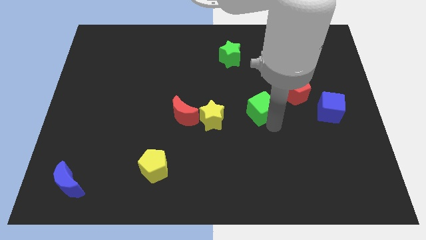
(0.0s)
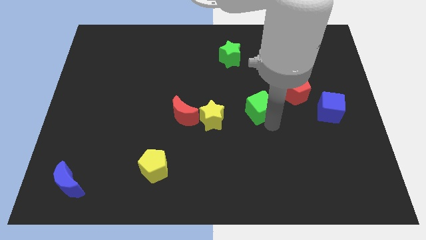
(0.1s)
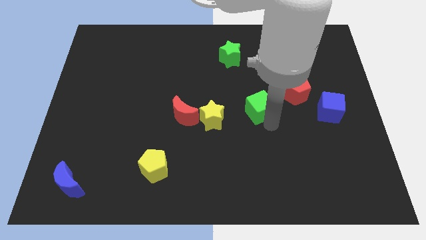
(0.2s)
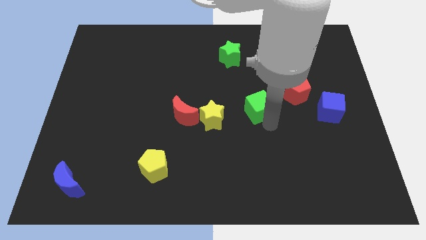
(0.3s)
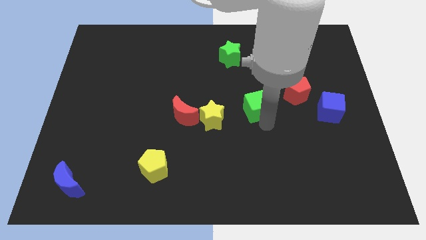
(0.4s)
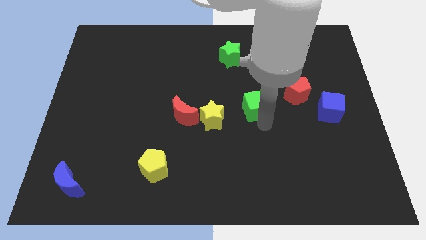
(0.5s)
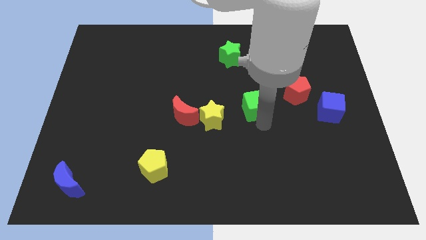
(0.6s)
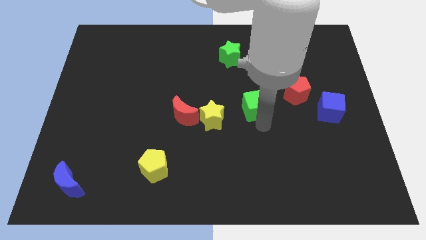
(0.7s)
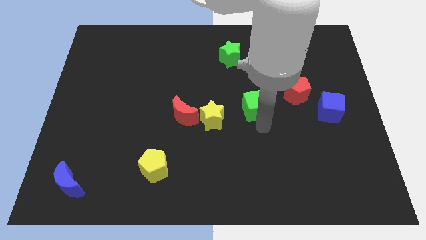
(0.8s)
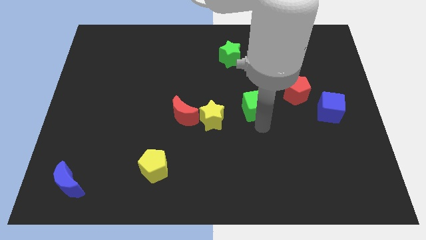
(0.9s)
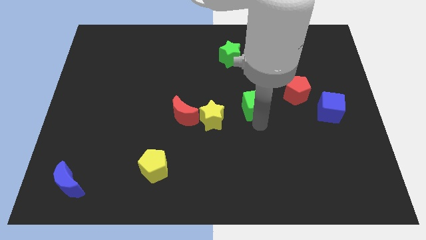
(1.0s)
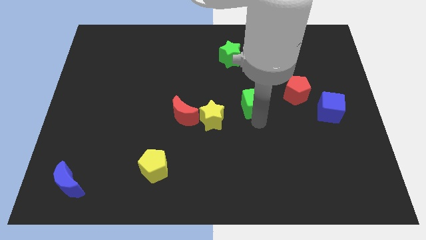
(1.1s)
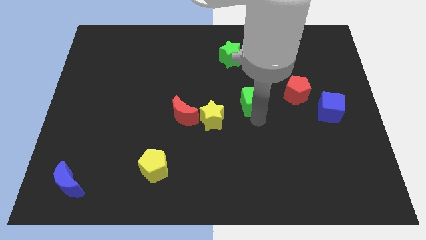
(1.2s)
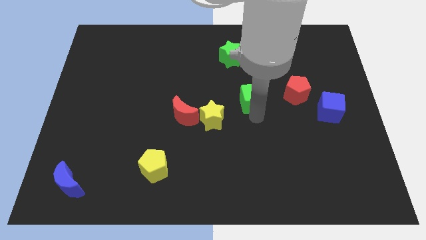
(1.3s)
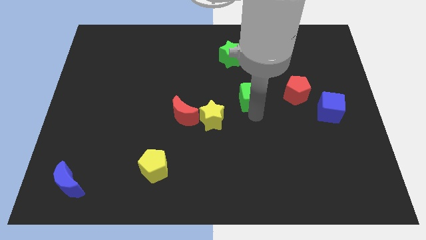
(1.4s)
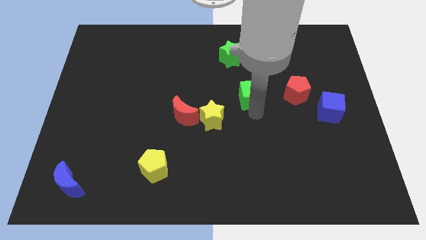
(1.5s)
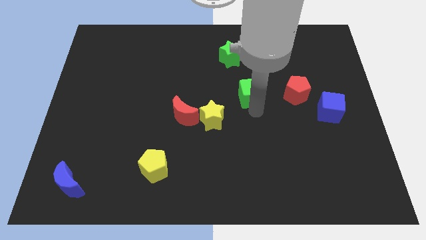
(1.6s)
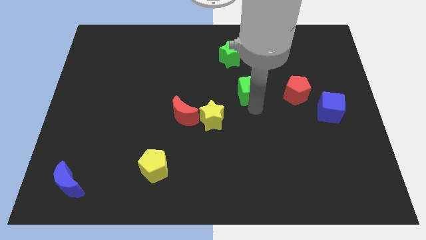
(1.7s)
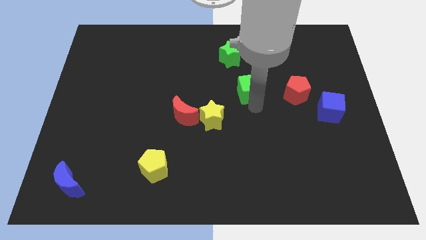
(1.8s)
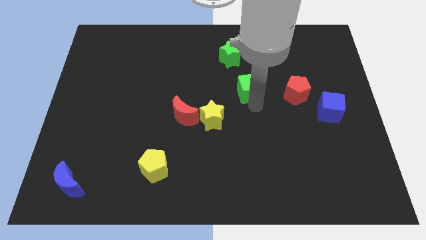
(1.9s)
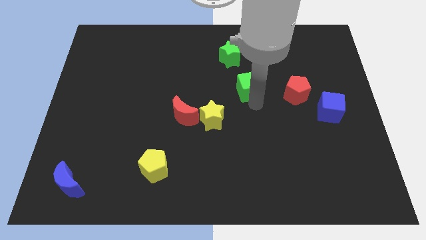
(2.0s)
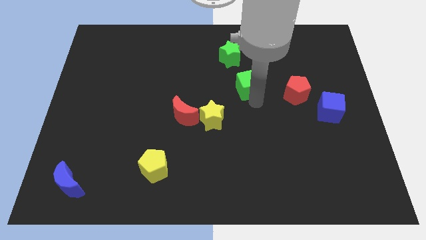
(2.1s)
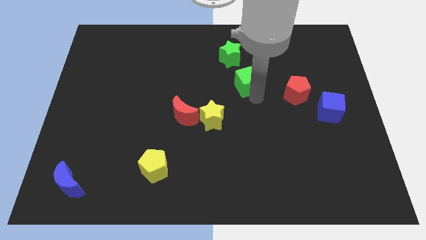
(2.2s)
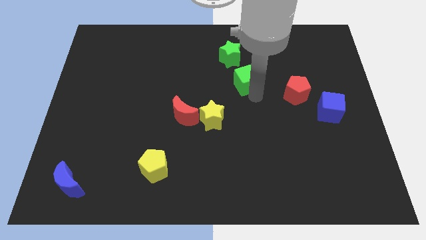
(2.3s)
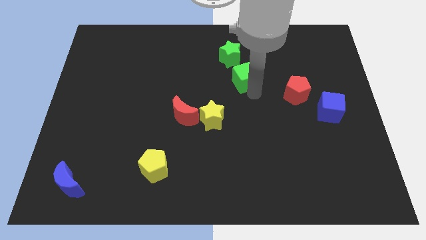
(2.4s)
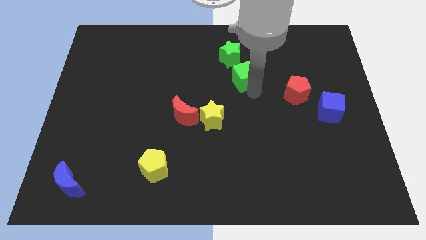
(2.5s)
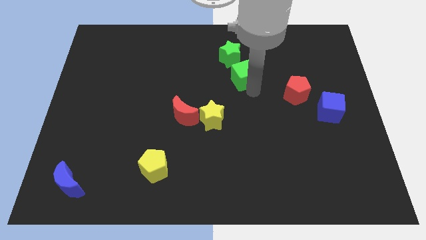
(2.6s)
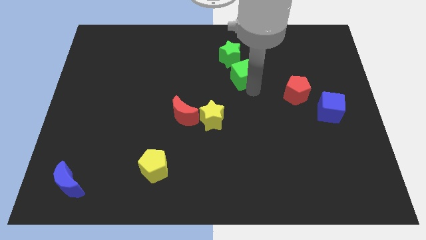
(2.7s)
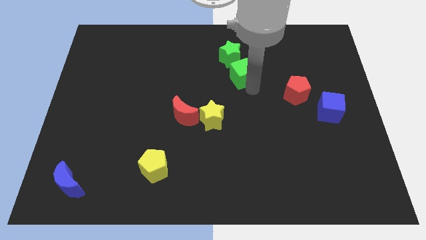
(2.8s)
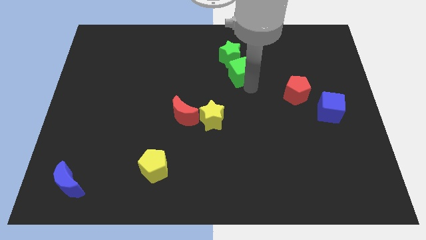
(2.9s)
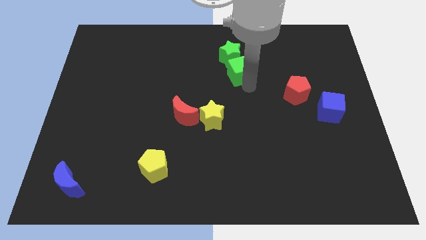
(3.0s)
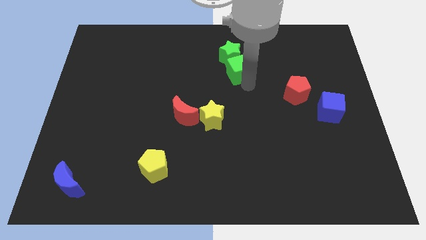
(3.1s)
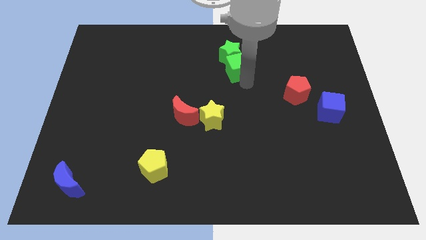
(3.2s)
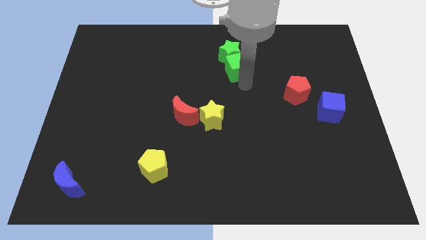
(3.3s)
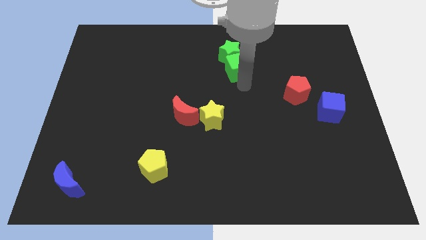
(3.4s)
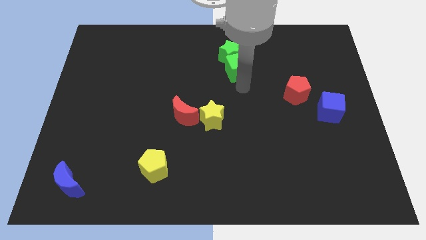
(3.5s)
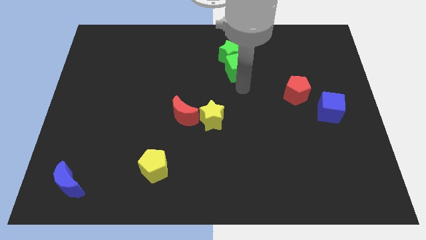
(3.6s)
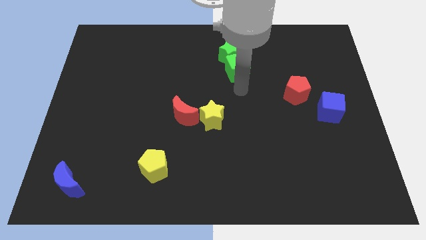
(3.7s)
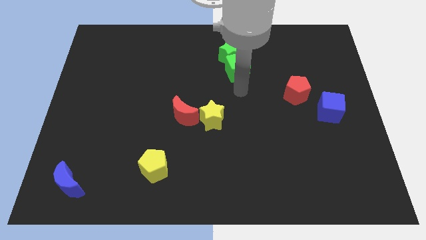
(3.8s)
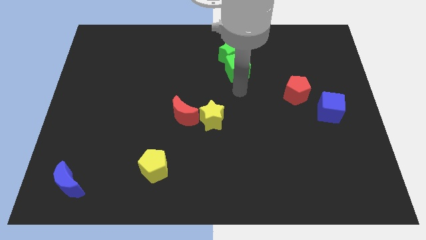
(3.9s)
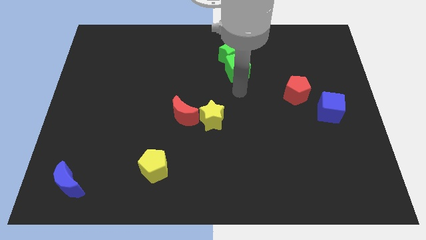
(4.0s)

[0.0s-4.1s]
group up the green blocks at the top center of the board

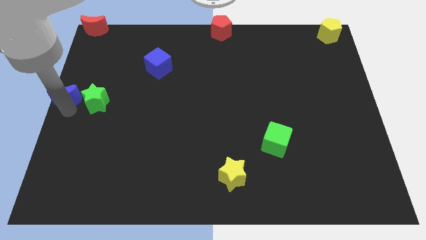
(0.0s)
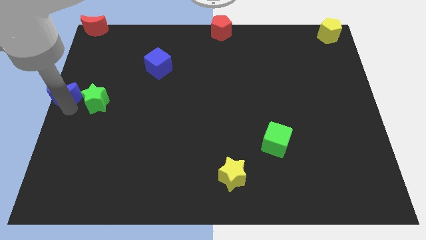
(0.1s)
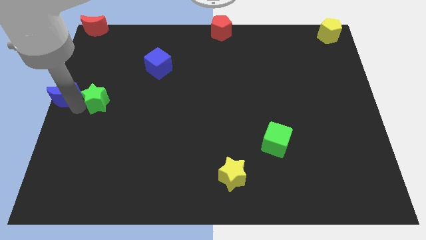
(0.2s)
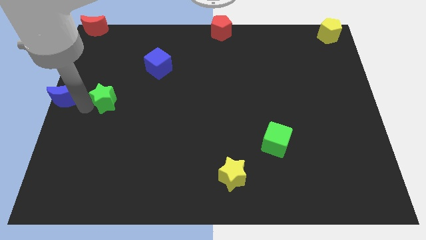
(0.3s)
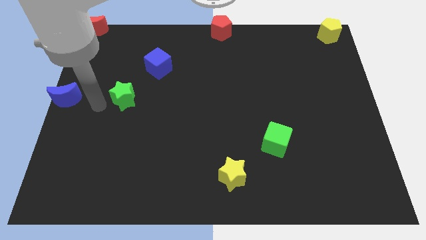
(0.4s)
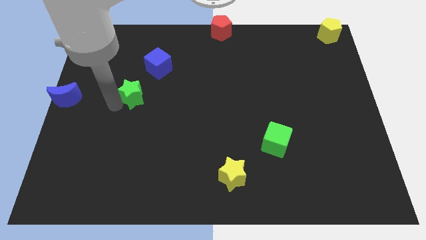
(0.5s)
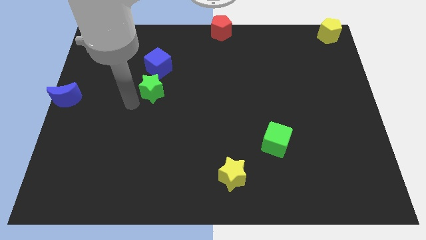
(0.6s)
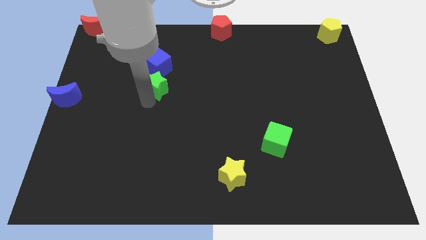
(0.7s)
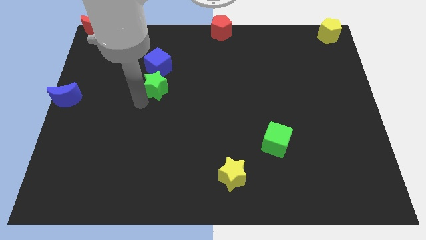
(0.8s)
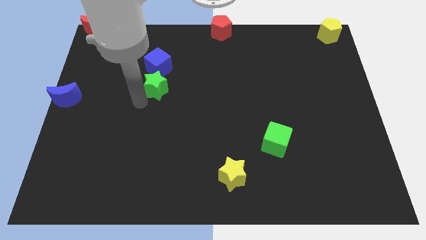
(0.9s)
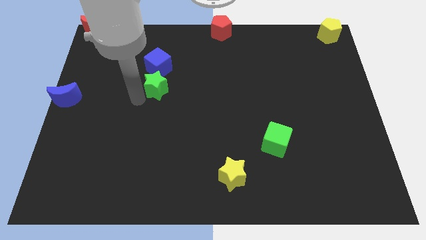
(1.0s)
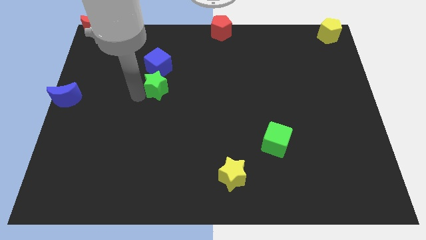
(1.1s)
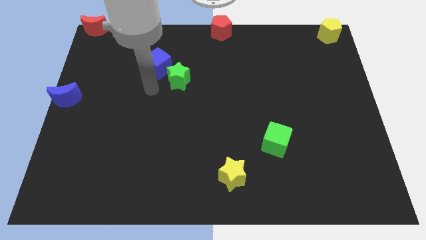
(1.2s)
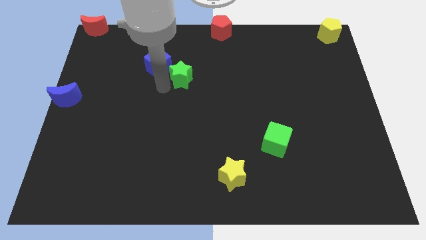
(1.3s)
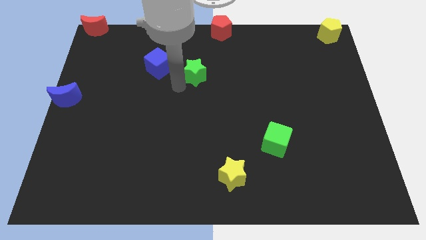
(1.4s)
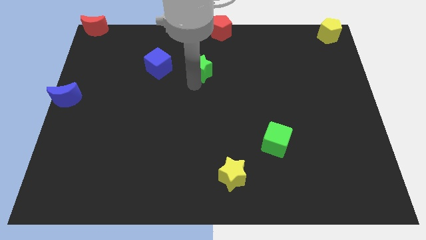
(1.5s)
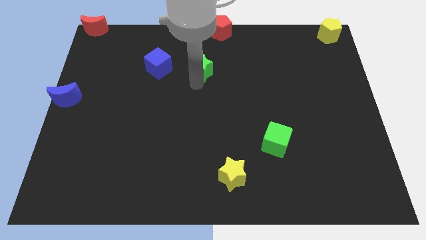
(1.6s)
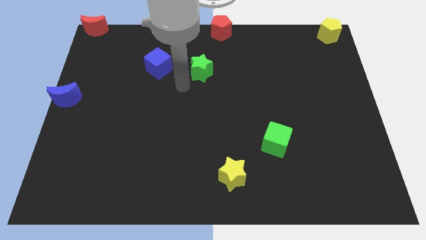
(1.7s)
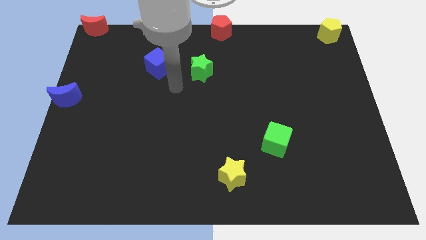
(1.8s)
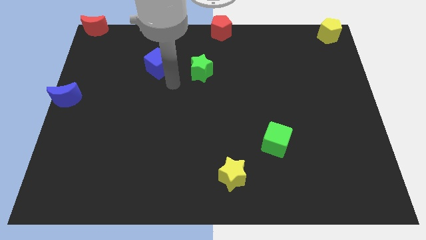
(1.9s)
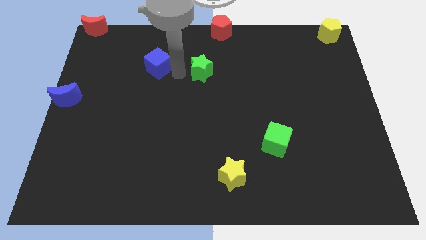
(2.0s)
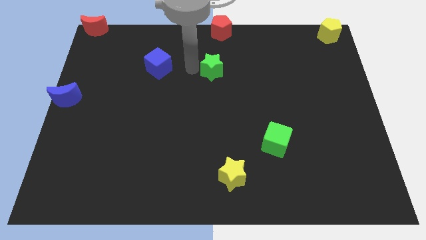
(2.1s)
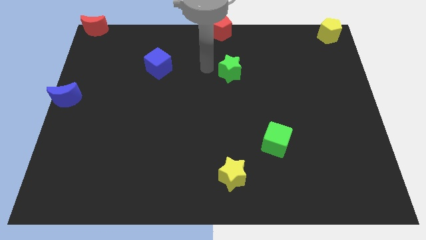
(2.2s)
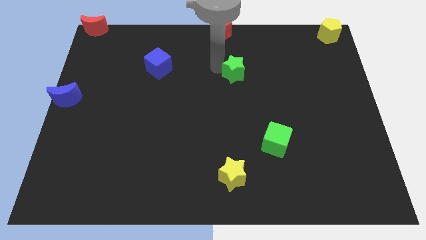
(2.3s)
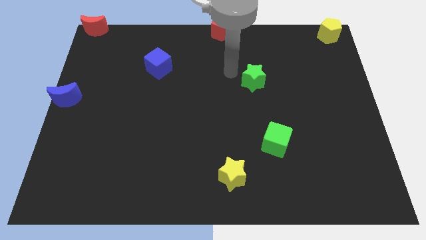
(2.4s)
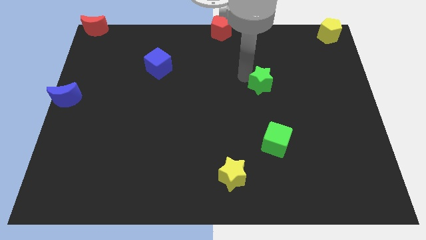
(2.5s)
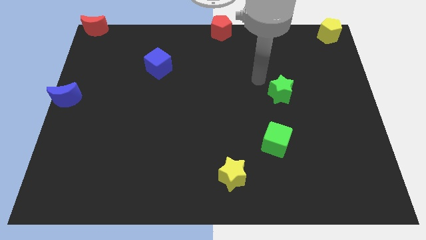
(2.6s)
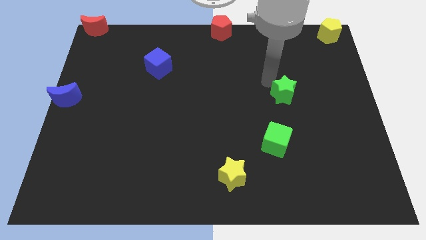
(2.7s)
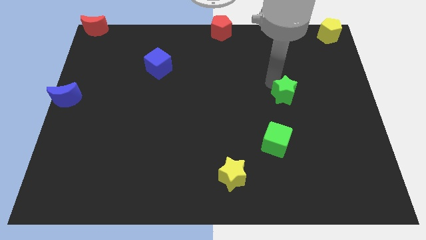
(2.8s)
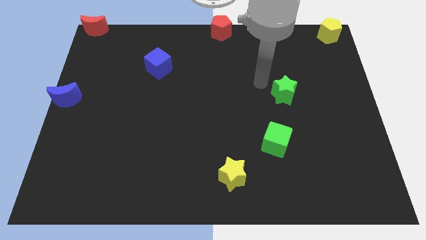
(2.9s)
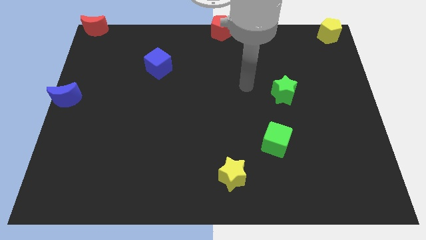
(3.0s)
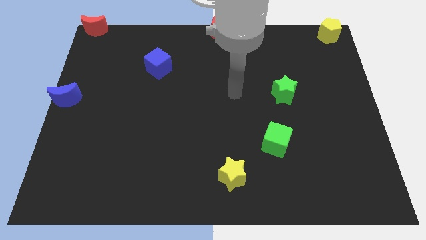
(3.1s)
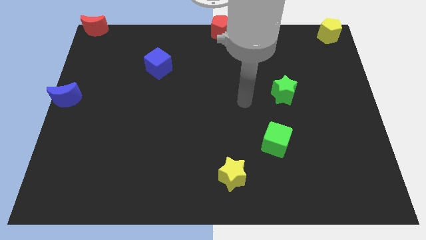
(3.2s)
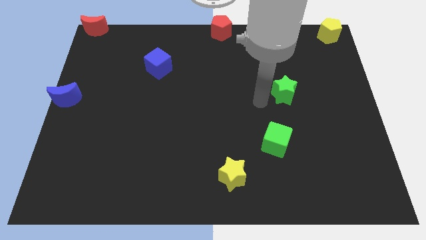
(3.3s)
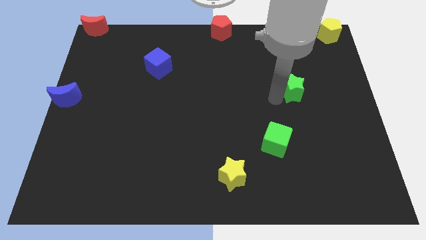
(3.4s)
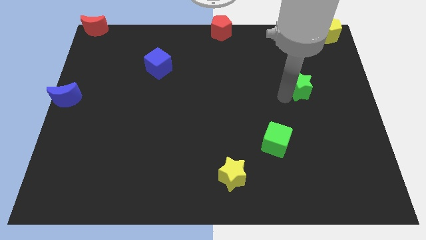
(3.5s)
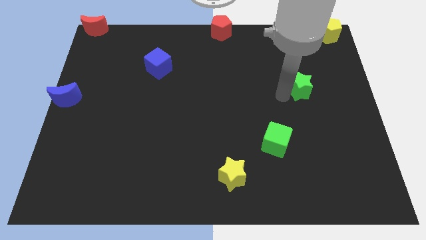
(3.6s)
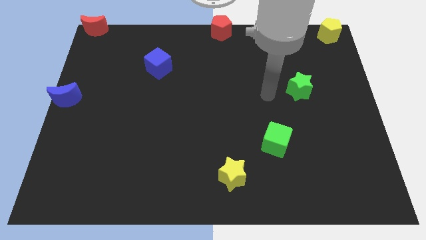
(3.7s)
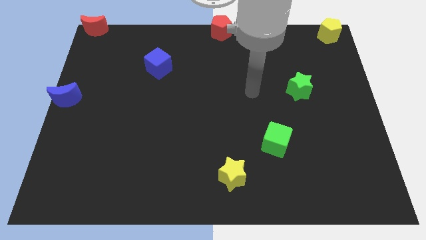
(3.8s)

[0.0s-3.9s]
move green star towards right diagonal to yellow pentagon

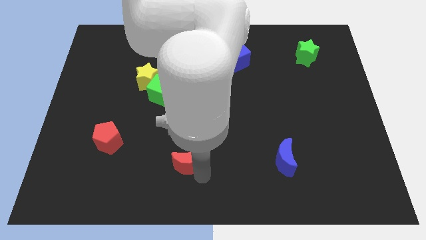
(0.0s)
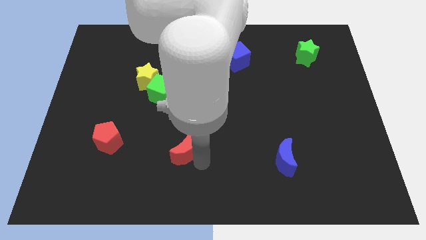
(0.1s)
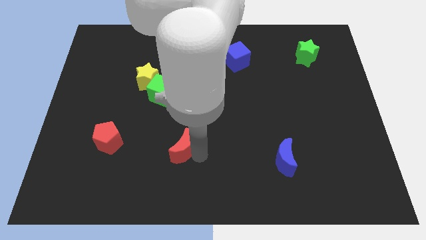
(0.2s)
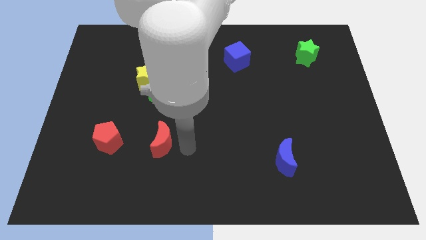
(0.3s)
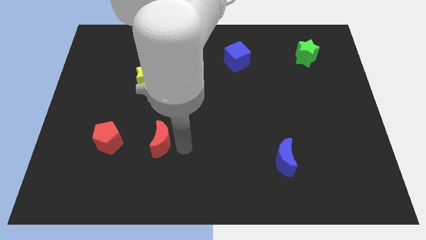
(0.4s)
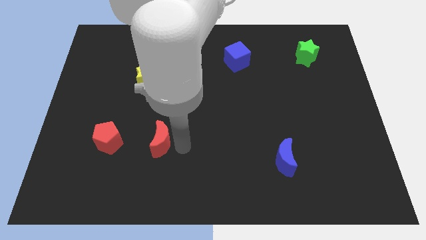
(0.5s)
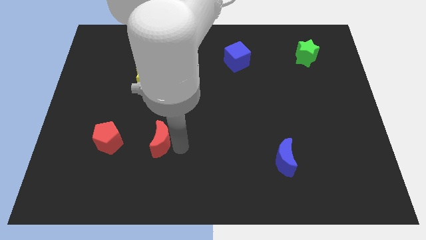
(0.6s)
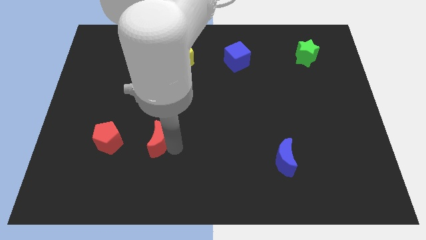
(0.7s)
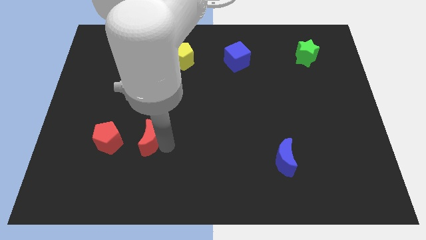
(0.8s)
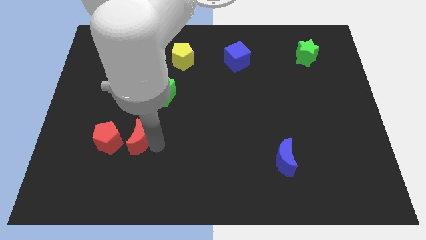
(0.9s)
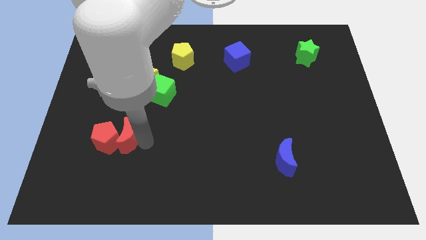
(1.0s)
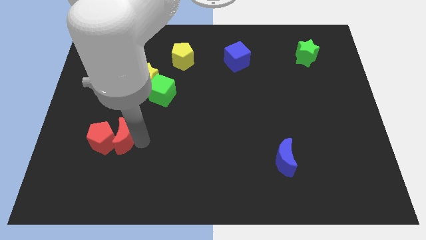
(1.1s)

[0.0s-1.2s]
place the red moon to the right side of red pentagon
